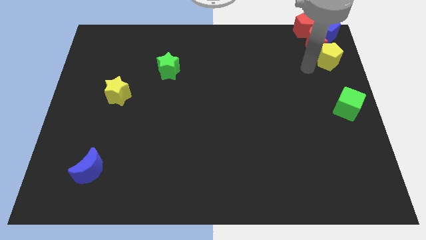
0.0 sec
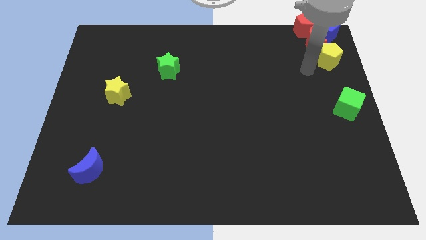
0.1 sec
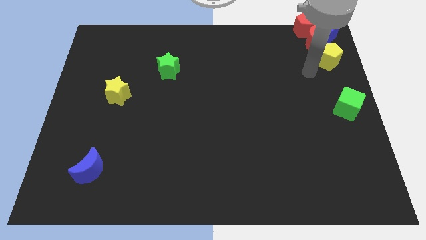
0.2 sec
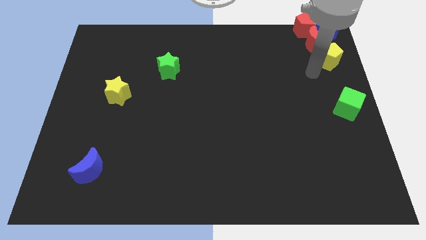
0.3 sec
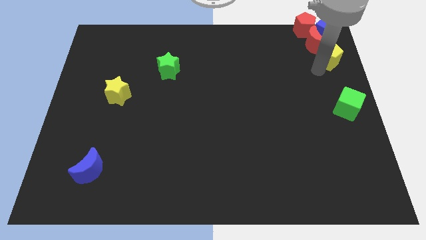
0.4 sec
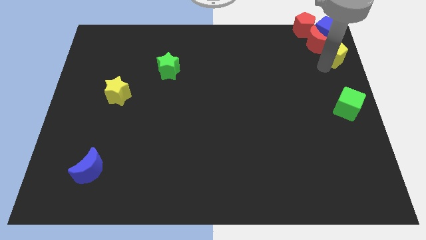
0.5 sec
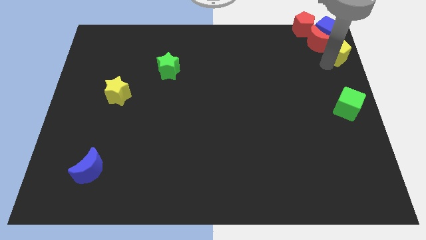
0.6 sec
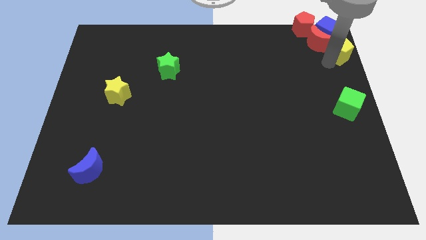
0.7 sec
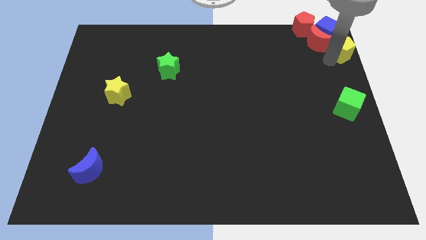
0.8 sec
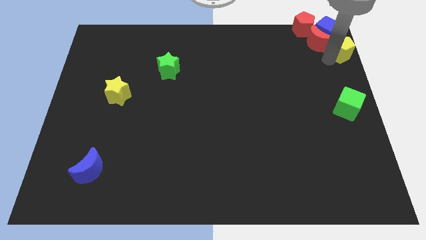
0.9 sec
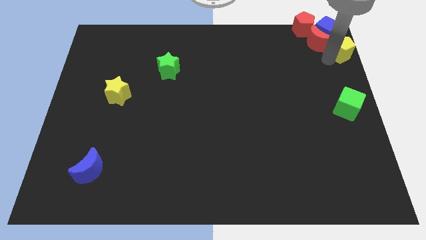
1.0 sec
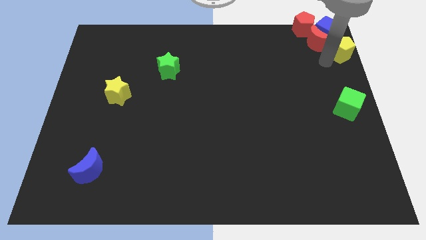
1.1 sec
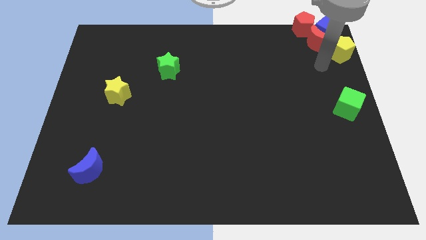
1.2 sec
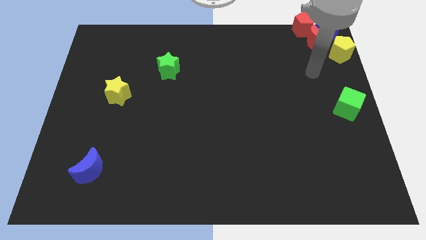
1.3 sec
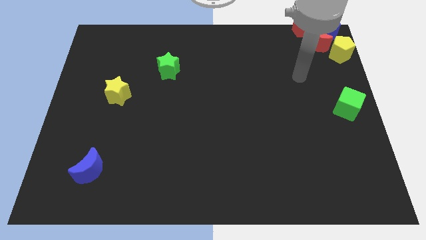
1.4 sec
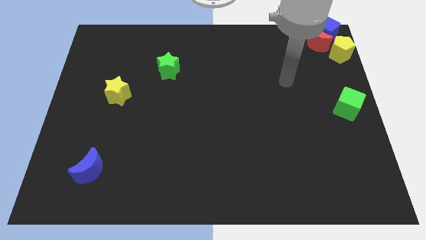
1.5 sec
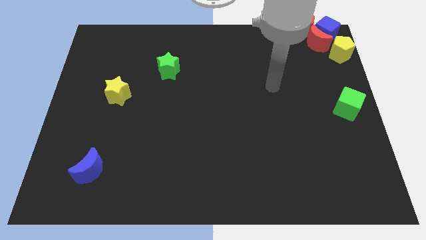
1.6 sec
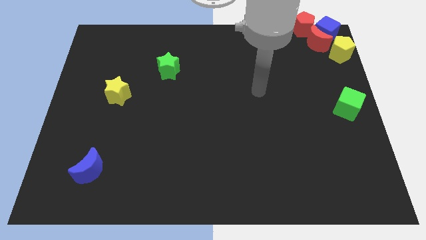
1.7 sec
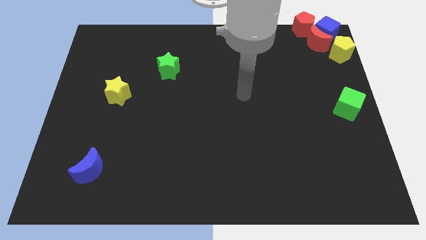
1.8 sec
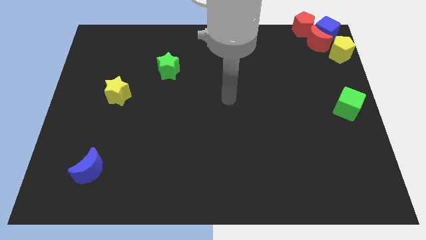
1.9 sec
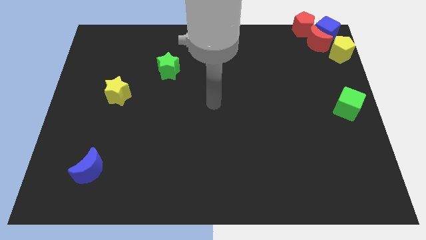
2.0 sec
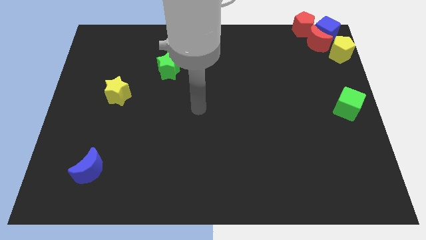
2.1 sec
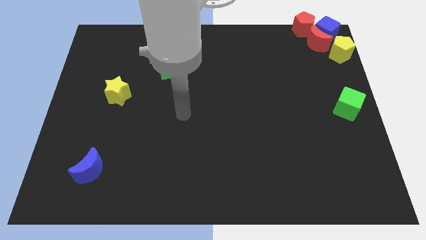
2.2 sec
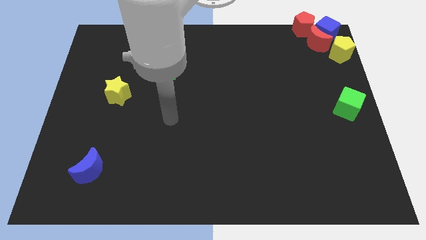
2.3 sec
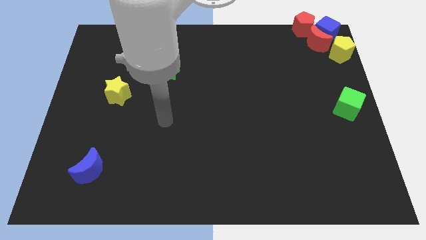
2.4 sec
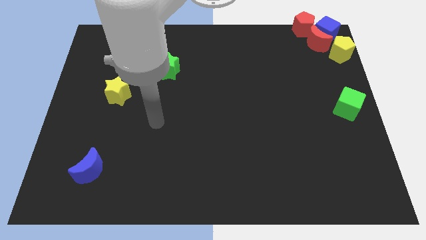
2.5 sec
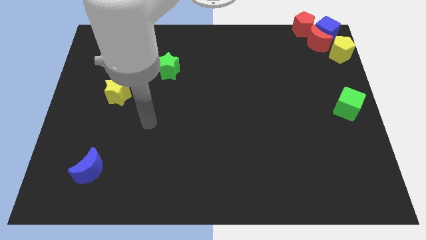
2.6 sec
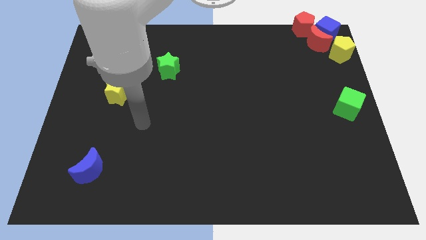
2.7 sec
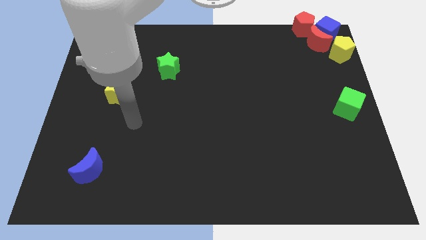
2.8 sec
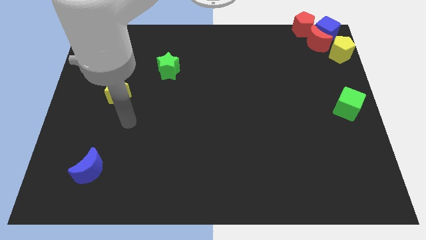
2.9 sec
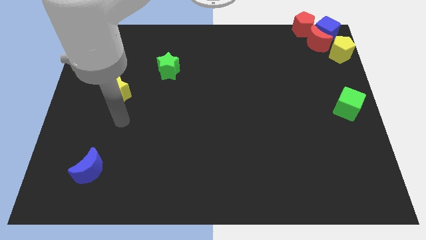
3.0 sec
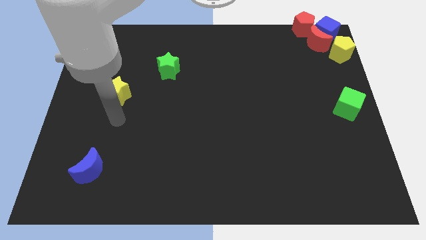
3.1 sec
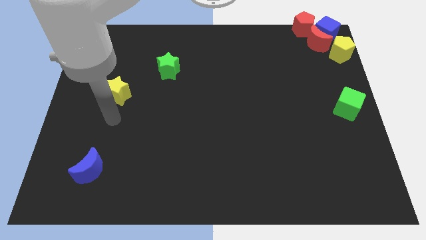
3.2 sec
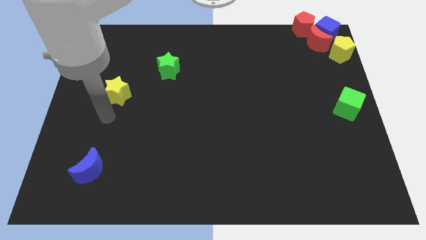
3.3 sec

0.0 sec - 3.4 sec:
go away from the yellow pentagon

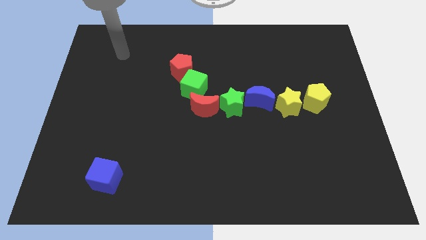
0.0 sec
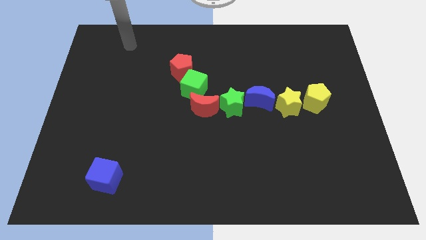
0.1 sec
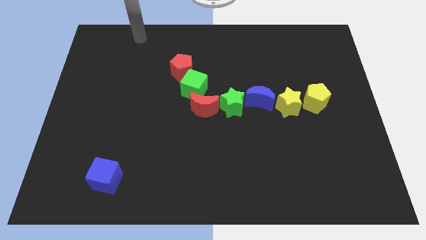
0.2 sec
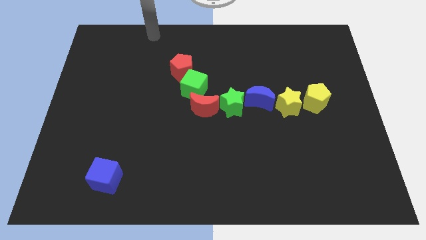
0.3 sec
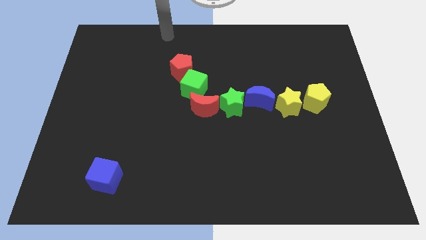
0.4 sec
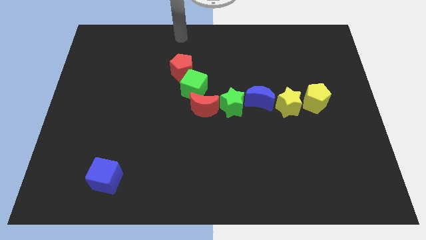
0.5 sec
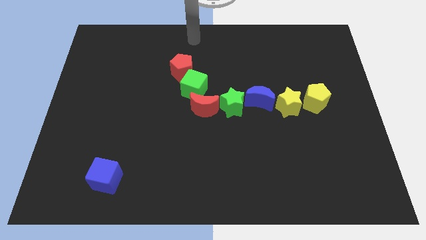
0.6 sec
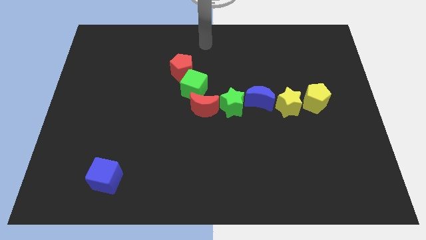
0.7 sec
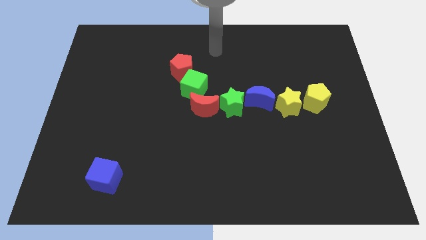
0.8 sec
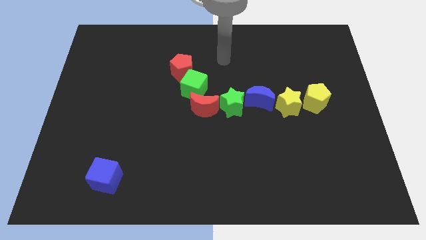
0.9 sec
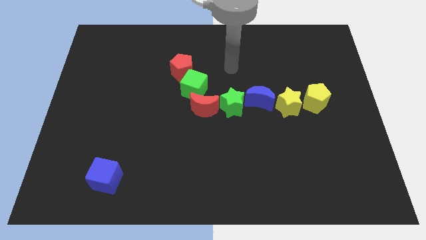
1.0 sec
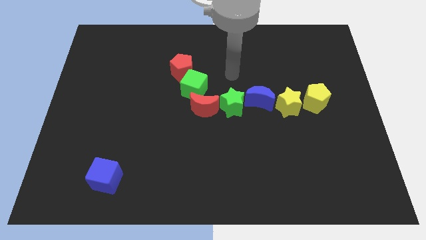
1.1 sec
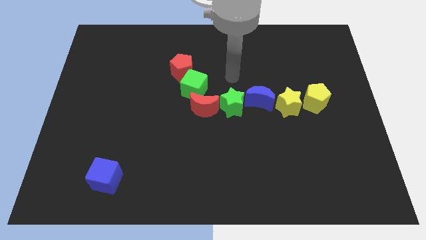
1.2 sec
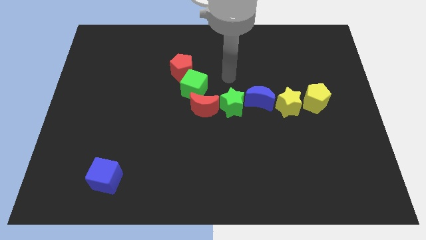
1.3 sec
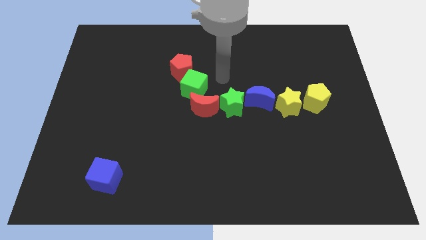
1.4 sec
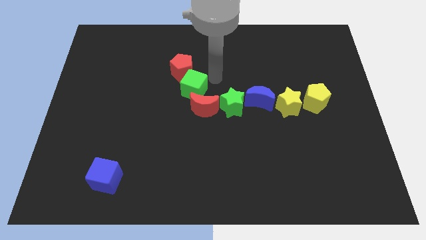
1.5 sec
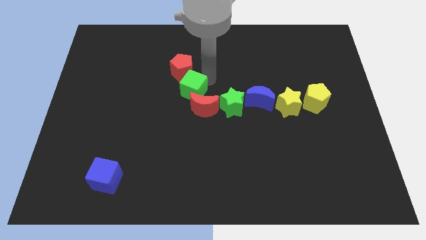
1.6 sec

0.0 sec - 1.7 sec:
place your arm right to the green cube

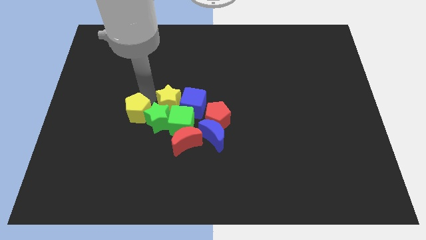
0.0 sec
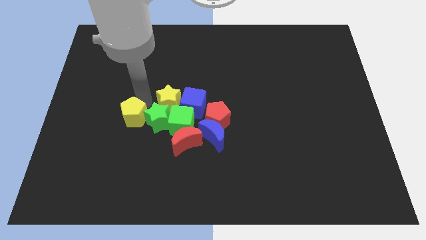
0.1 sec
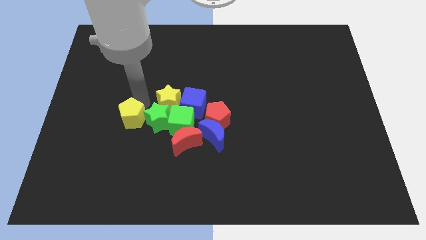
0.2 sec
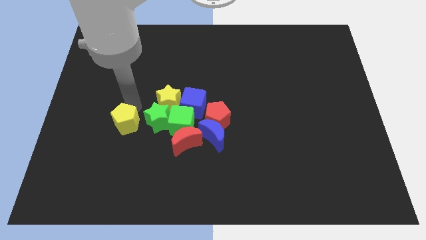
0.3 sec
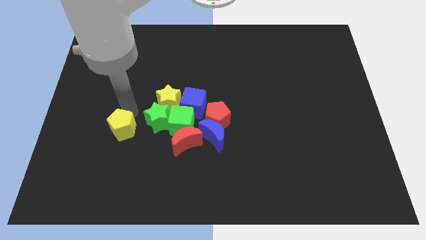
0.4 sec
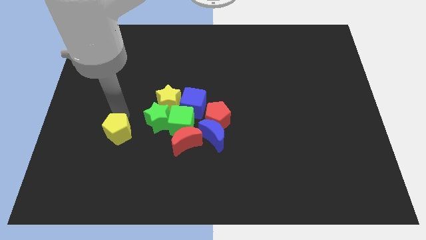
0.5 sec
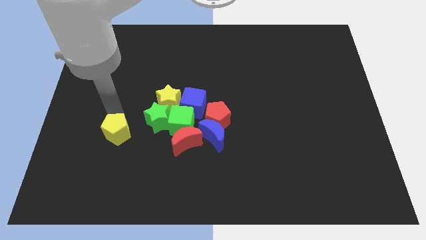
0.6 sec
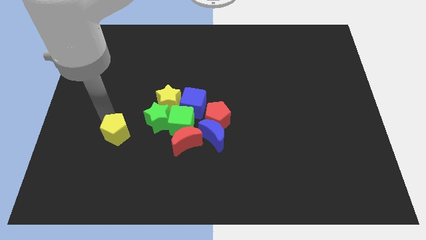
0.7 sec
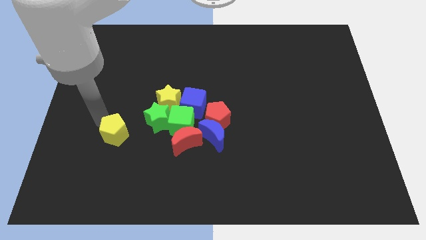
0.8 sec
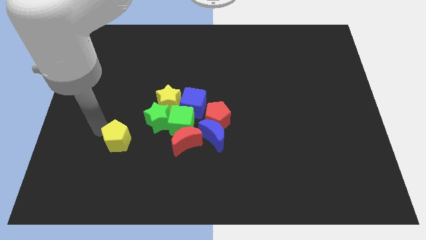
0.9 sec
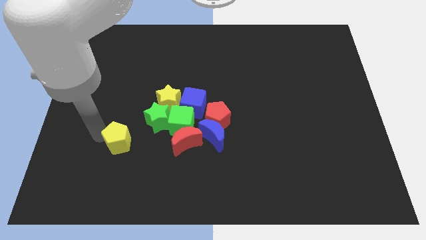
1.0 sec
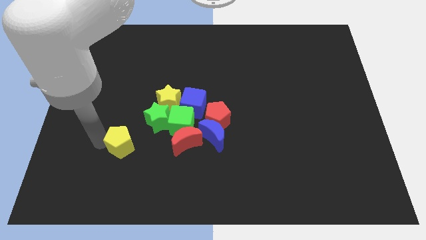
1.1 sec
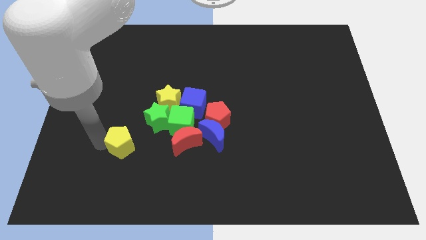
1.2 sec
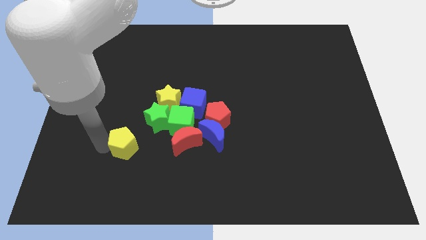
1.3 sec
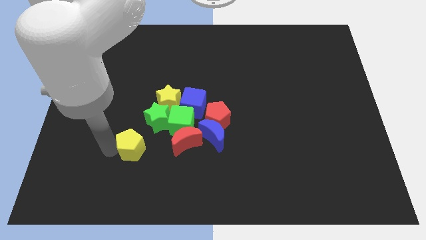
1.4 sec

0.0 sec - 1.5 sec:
separate yellow pentagon from the green star

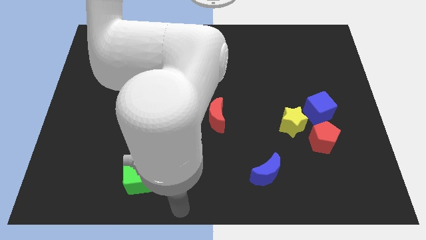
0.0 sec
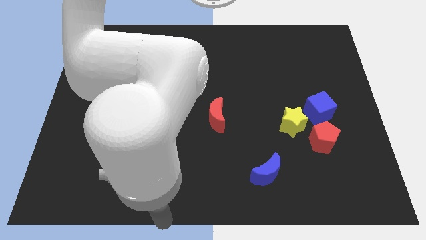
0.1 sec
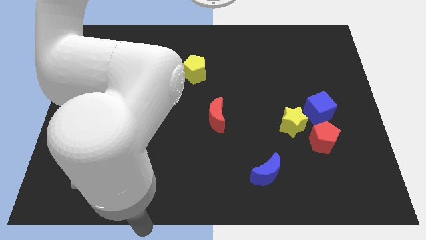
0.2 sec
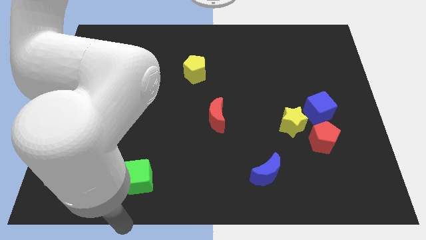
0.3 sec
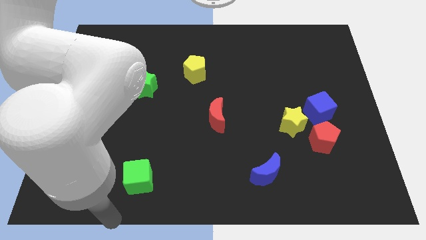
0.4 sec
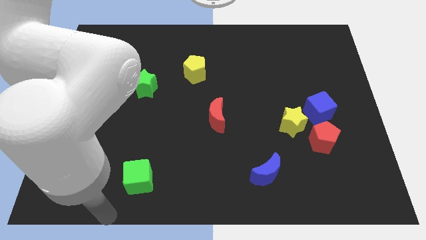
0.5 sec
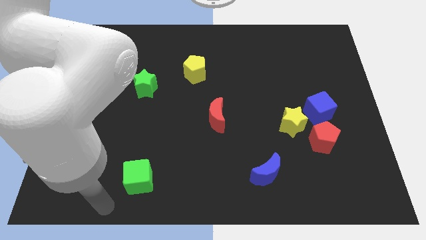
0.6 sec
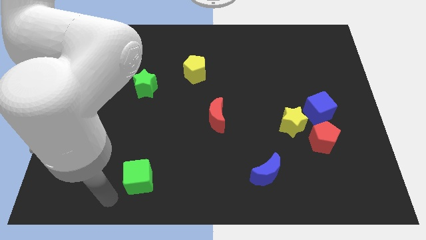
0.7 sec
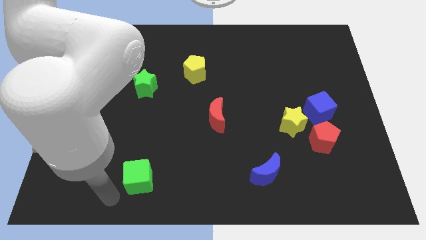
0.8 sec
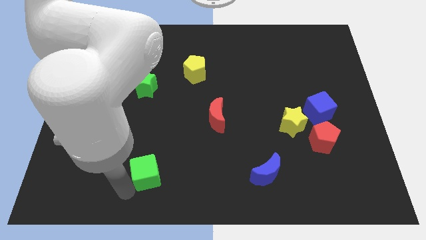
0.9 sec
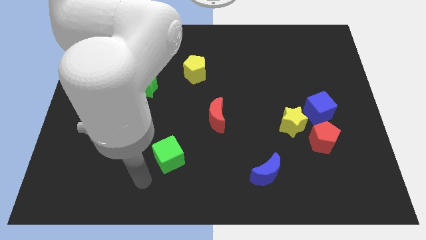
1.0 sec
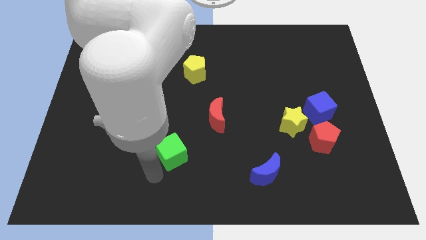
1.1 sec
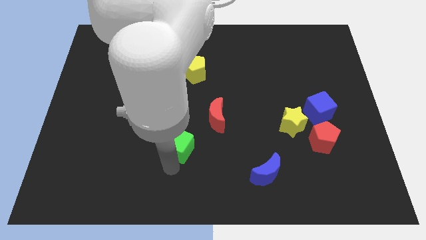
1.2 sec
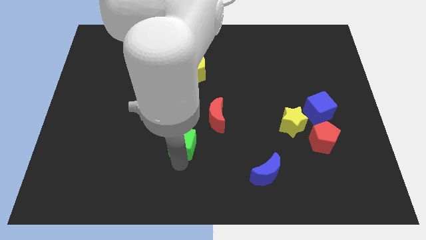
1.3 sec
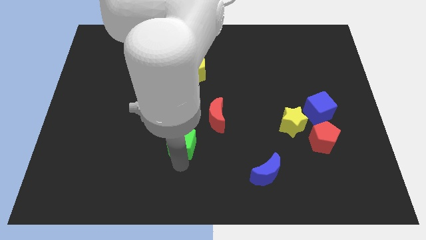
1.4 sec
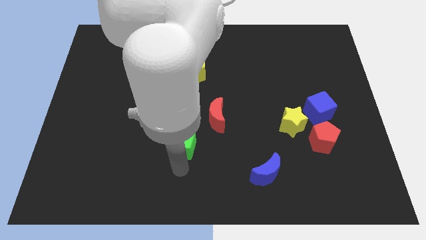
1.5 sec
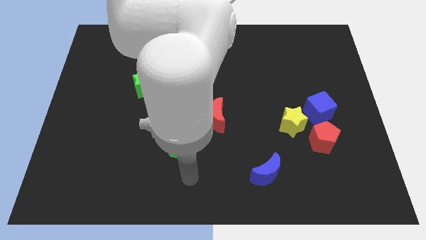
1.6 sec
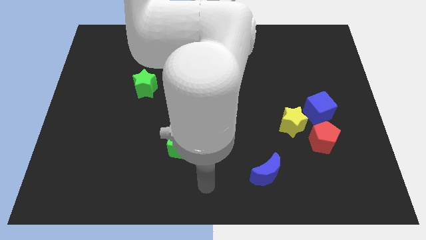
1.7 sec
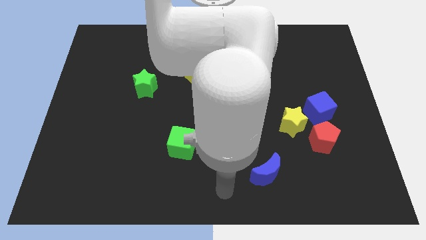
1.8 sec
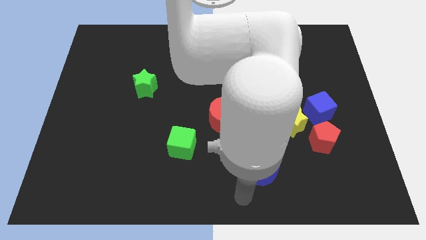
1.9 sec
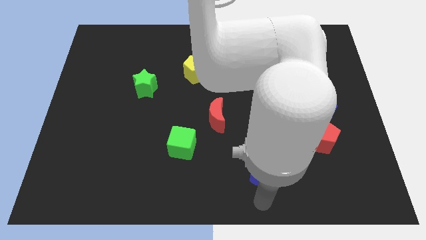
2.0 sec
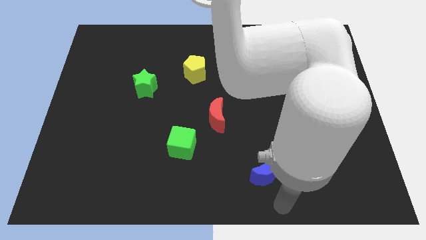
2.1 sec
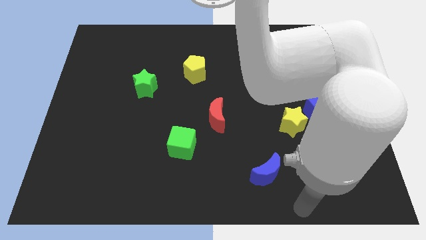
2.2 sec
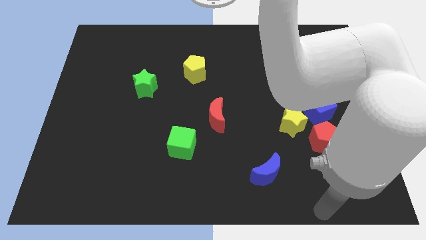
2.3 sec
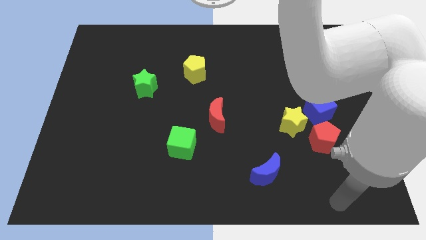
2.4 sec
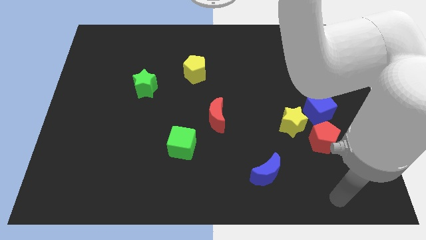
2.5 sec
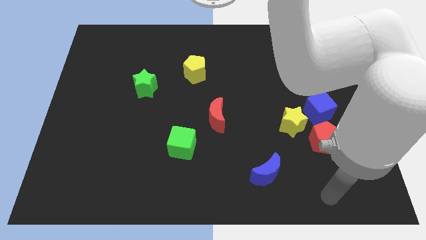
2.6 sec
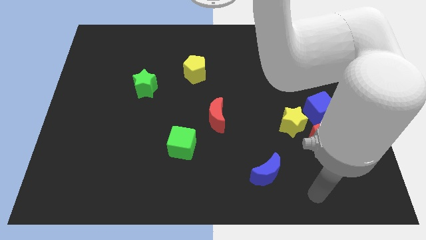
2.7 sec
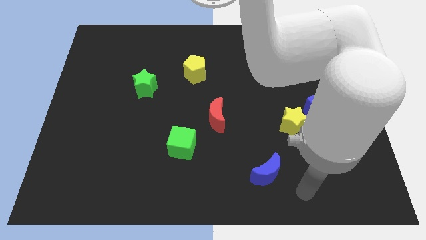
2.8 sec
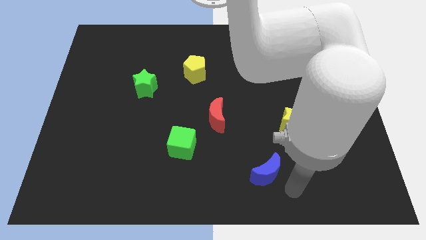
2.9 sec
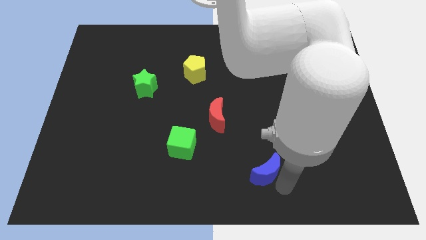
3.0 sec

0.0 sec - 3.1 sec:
place green cube to the bottom left of the red moon
